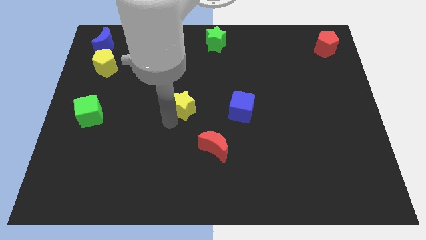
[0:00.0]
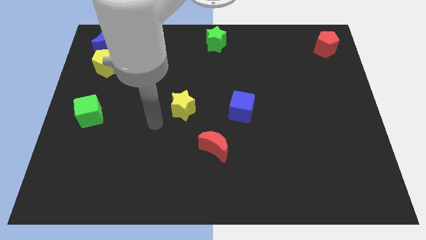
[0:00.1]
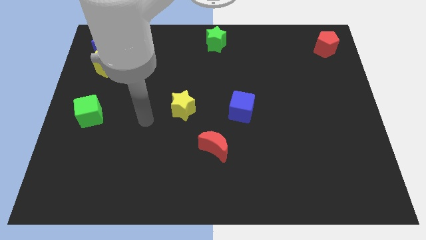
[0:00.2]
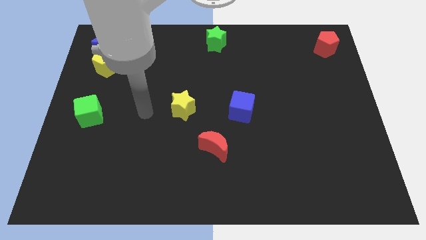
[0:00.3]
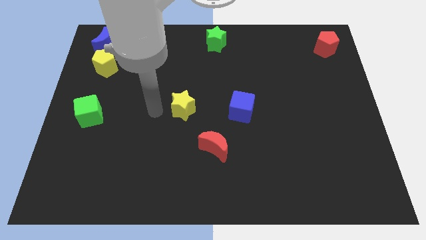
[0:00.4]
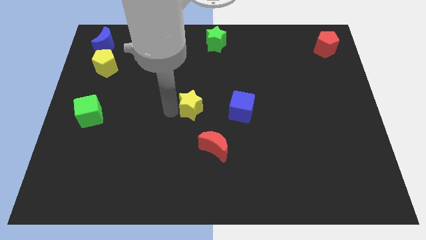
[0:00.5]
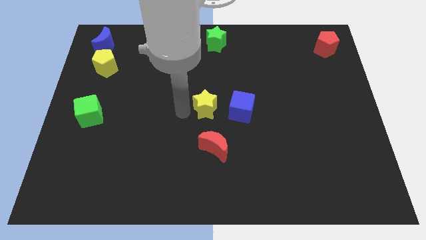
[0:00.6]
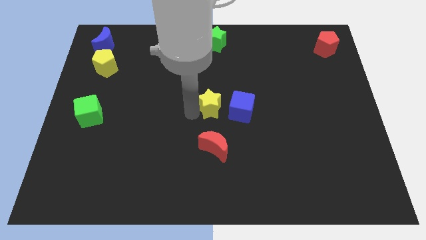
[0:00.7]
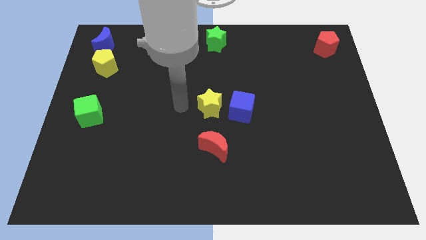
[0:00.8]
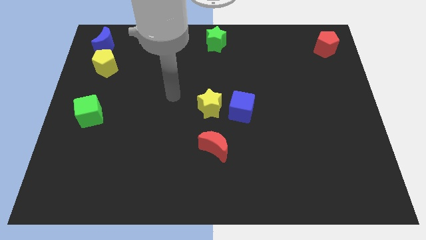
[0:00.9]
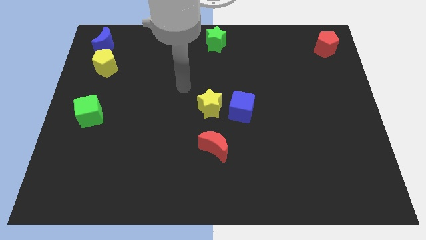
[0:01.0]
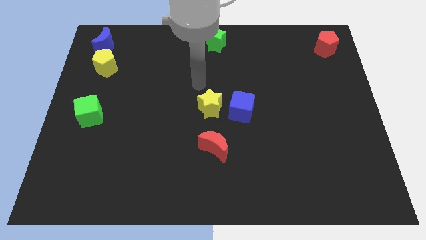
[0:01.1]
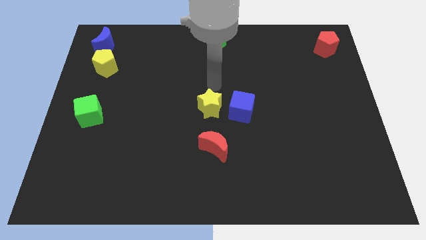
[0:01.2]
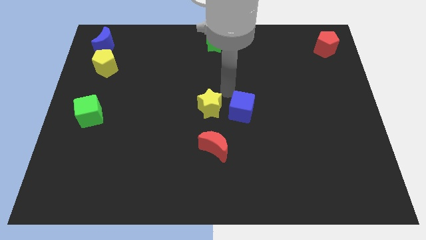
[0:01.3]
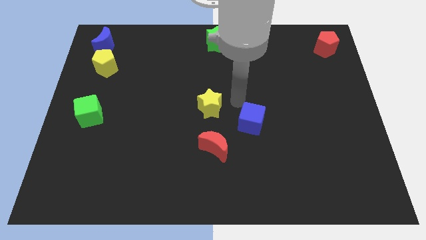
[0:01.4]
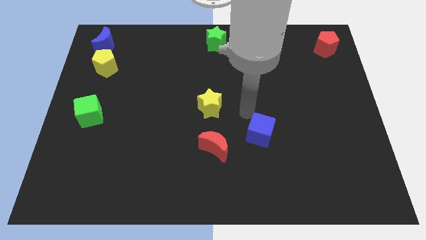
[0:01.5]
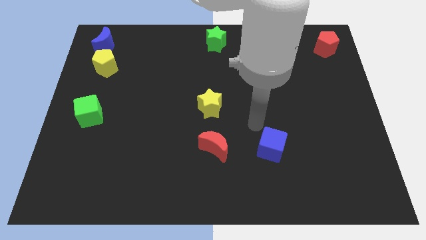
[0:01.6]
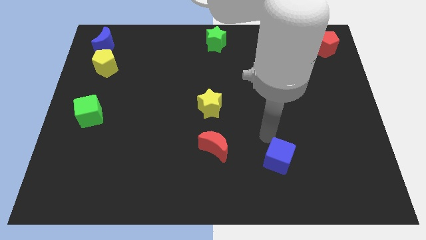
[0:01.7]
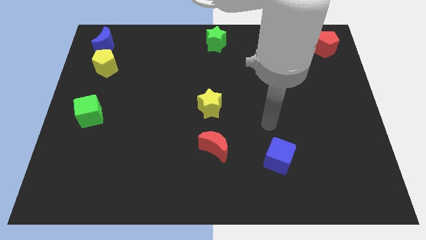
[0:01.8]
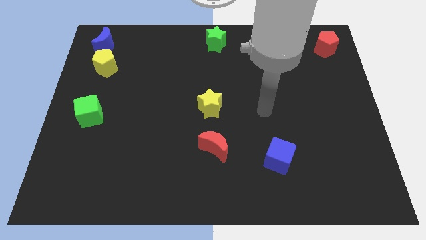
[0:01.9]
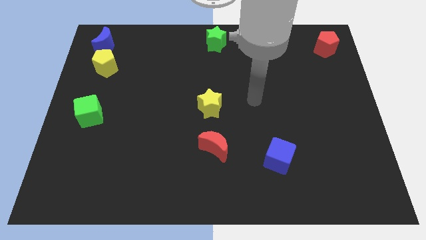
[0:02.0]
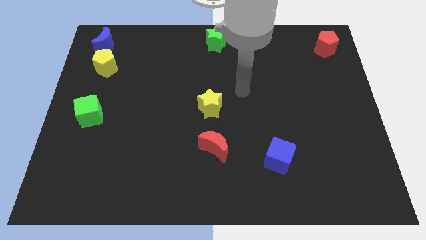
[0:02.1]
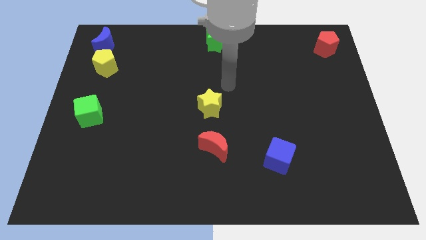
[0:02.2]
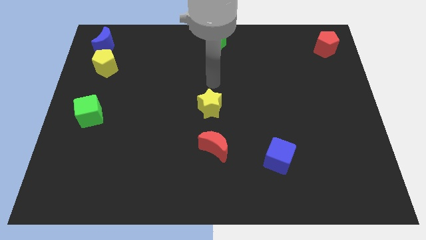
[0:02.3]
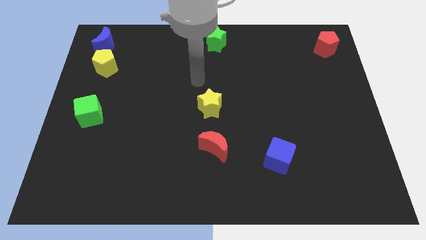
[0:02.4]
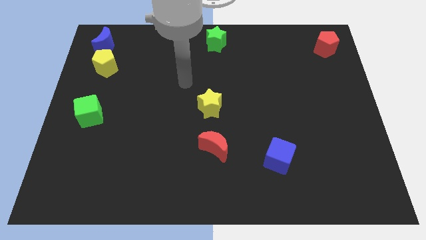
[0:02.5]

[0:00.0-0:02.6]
place blue cube parallel to red moon

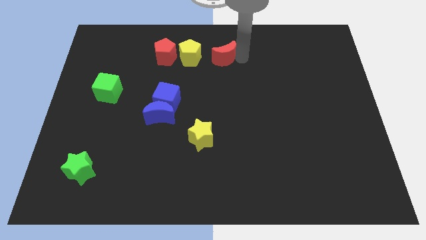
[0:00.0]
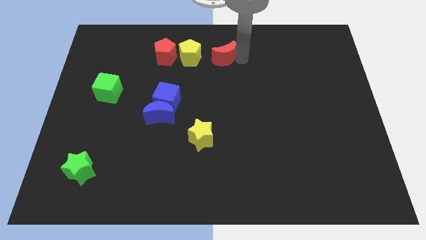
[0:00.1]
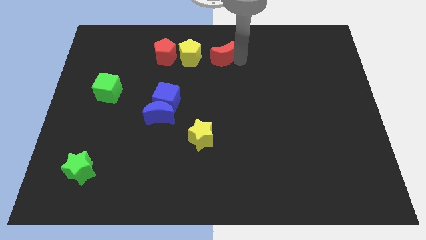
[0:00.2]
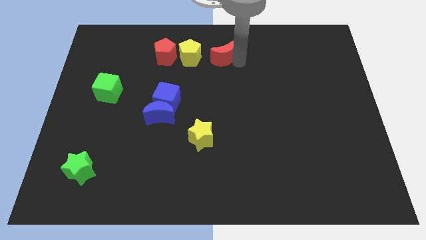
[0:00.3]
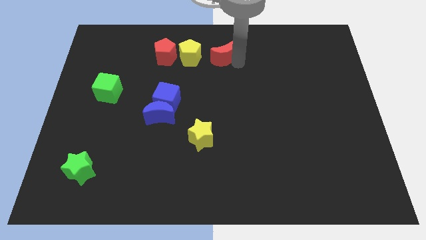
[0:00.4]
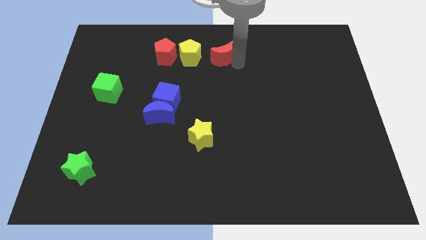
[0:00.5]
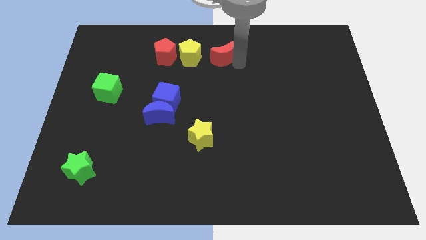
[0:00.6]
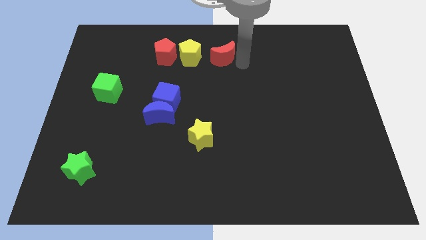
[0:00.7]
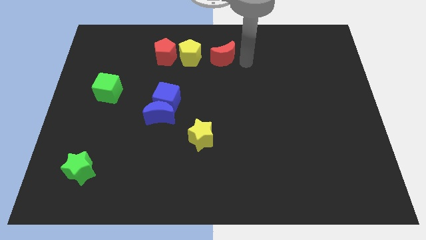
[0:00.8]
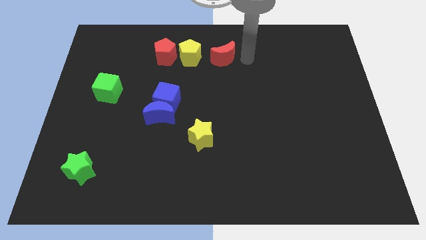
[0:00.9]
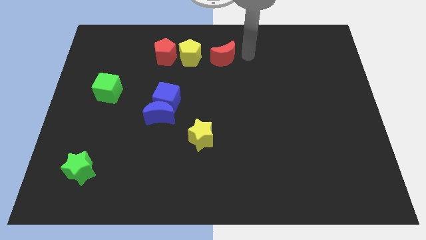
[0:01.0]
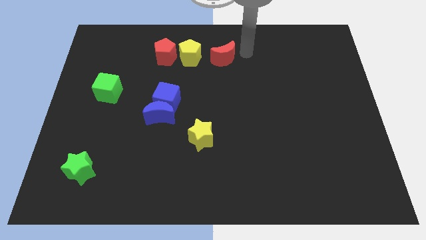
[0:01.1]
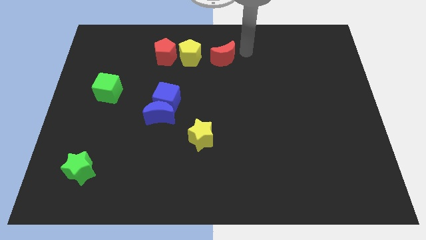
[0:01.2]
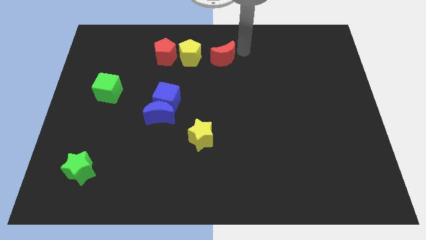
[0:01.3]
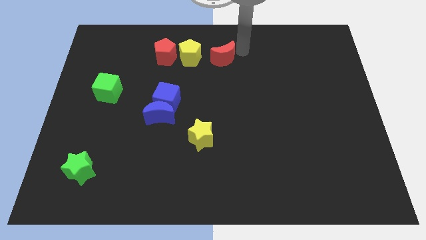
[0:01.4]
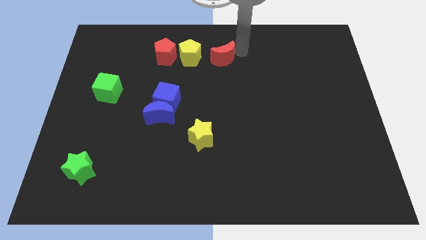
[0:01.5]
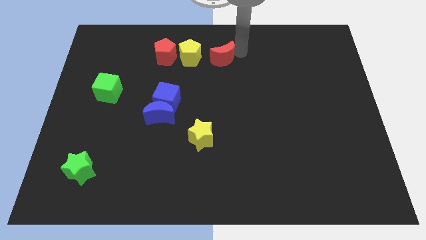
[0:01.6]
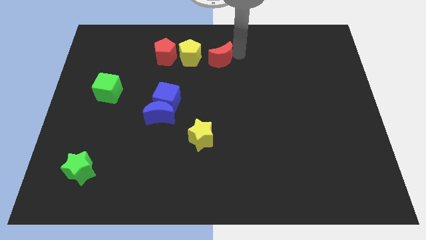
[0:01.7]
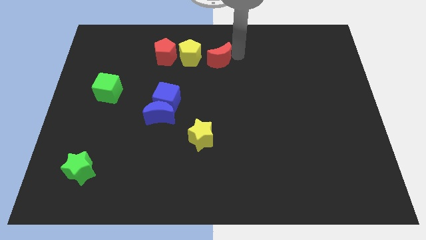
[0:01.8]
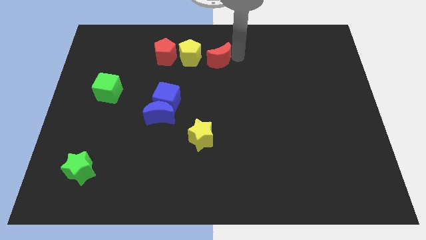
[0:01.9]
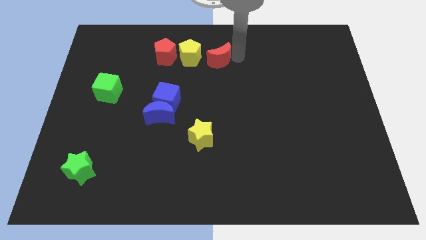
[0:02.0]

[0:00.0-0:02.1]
put the red crescent on the right side of the yellow pentagon

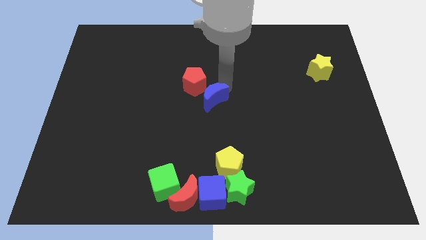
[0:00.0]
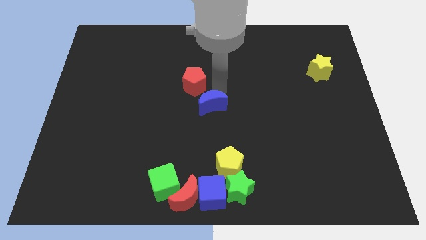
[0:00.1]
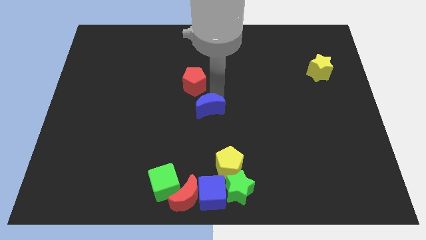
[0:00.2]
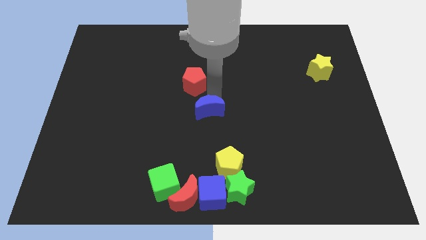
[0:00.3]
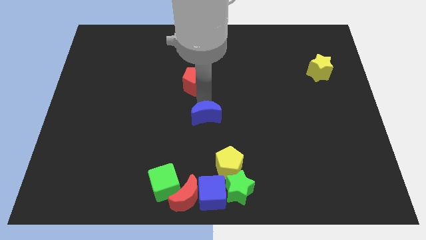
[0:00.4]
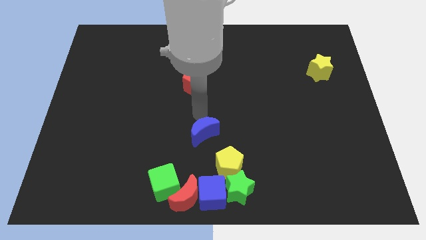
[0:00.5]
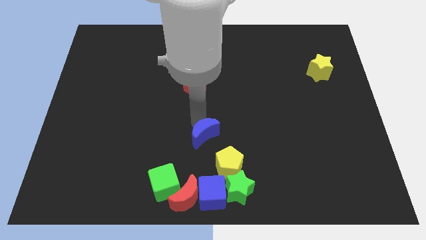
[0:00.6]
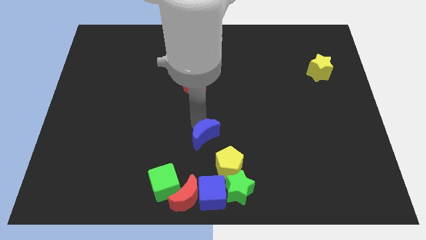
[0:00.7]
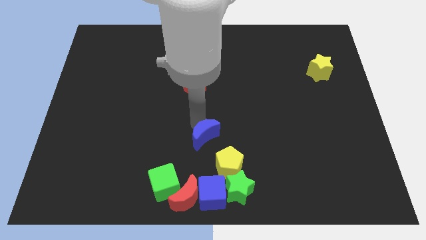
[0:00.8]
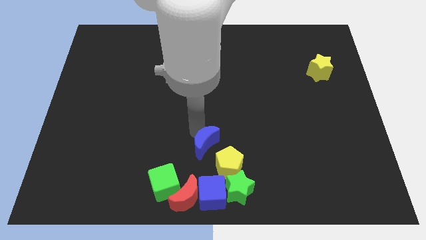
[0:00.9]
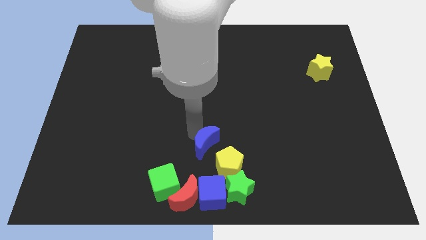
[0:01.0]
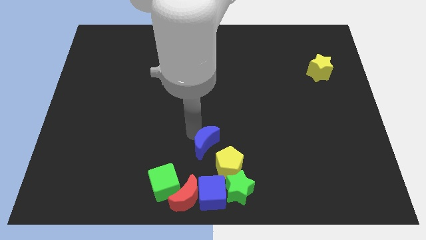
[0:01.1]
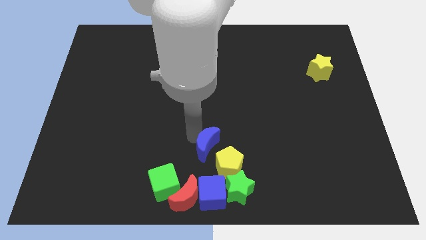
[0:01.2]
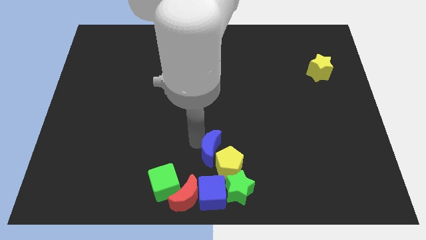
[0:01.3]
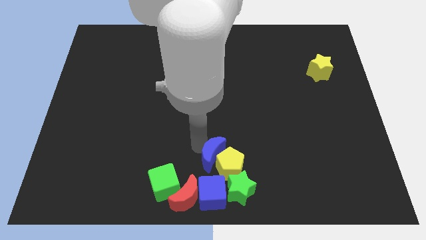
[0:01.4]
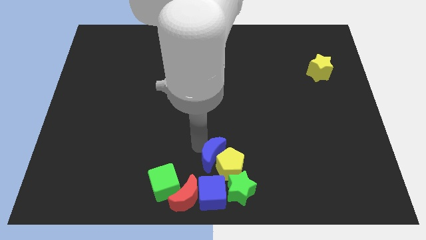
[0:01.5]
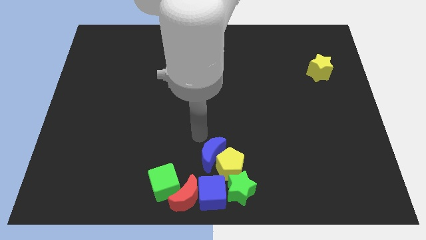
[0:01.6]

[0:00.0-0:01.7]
push the blue crescent to the left of the yellow pentagon

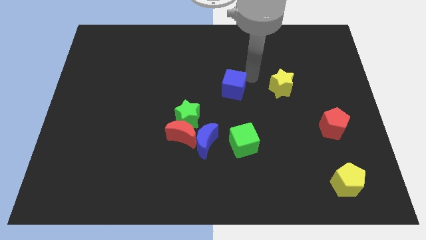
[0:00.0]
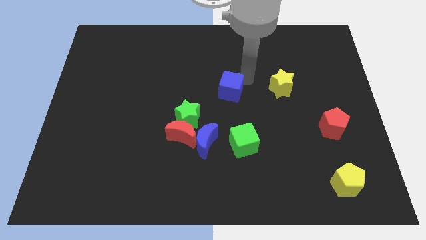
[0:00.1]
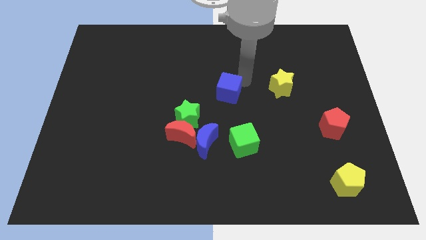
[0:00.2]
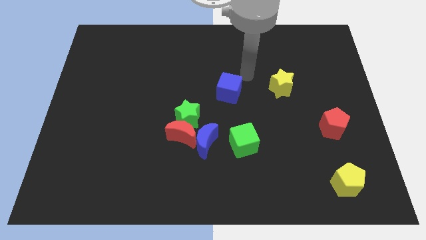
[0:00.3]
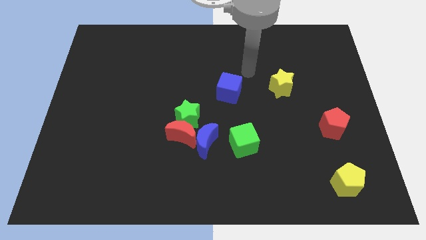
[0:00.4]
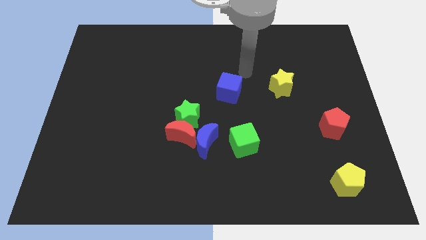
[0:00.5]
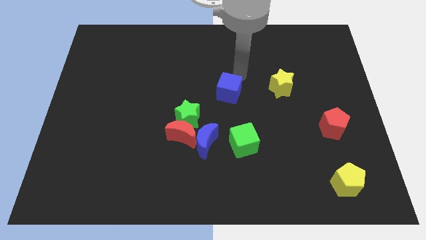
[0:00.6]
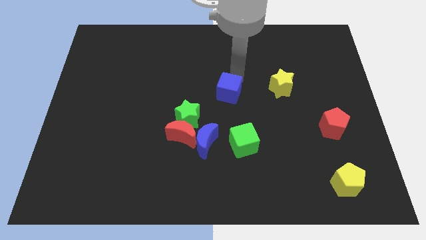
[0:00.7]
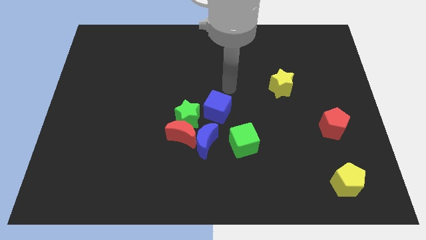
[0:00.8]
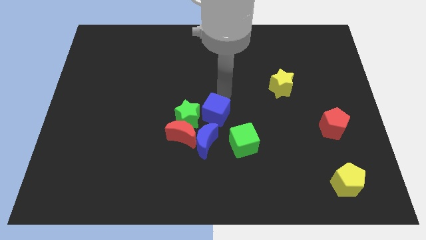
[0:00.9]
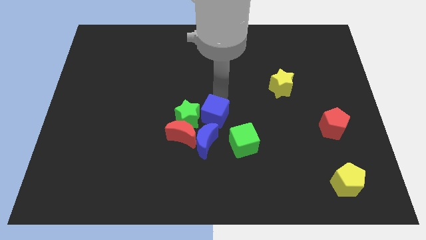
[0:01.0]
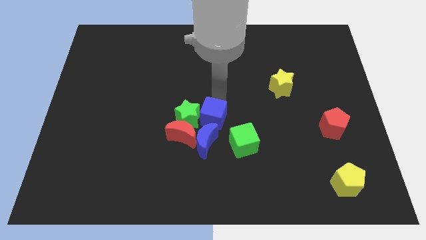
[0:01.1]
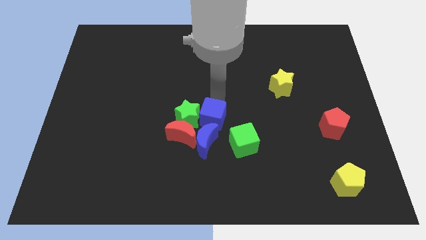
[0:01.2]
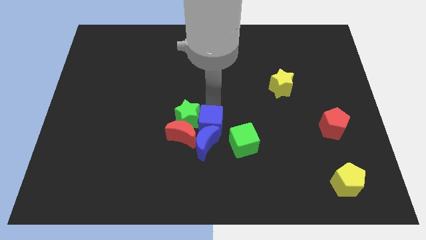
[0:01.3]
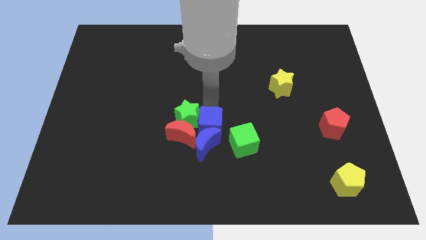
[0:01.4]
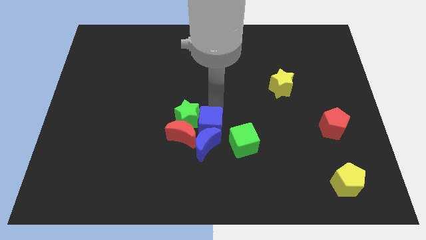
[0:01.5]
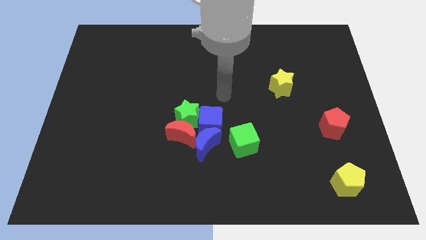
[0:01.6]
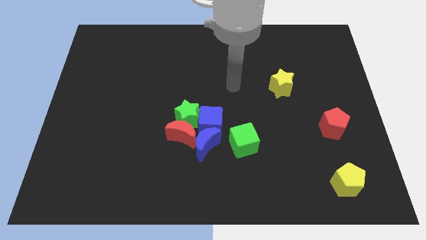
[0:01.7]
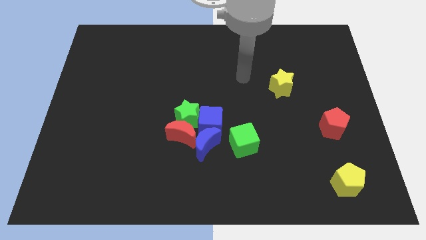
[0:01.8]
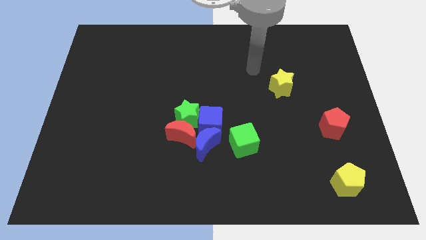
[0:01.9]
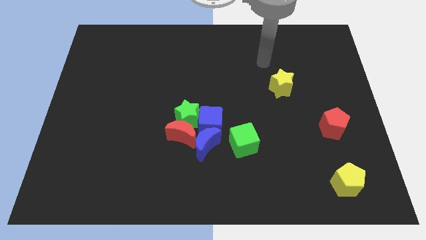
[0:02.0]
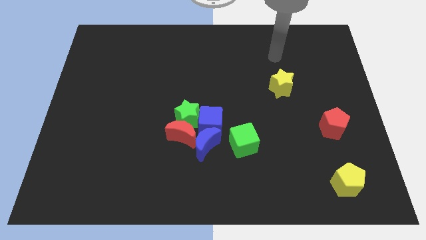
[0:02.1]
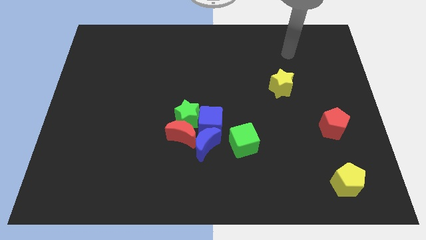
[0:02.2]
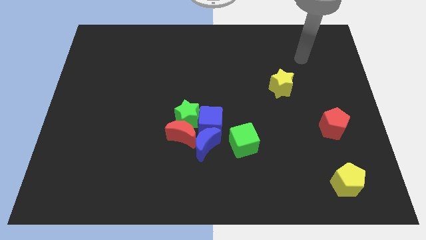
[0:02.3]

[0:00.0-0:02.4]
push the blue cube into the blue crescent

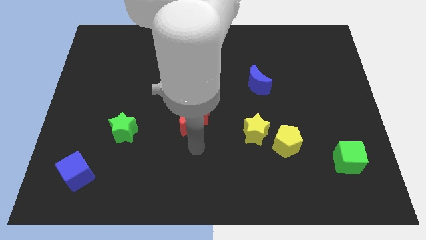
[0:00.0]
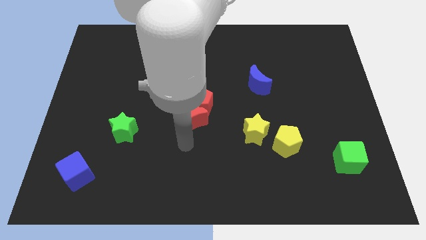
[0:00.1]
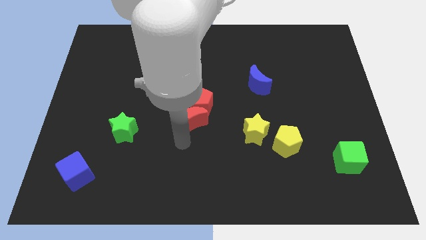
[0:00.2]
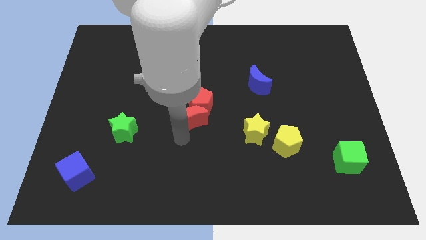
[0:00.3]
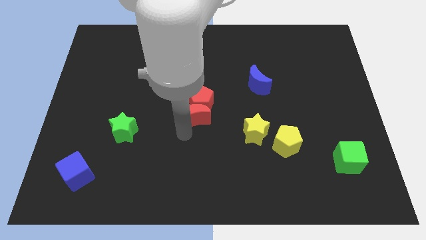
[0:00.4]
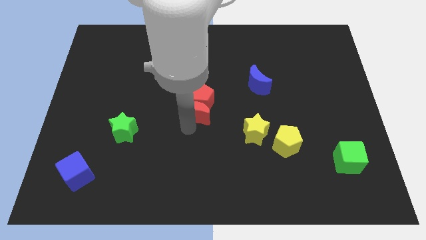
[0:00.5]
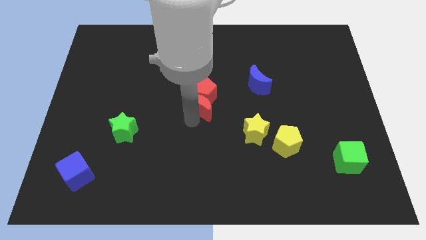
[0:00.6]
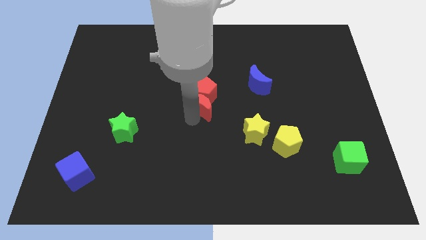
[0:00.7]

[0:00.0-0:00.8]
move the red crescent along with the red pentagon to the center
